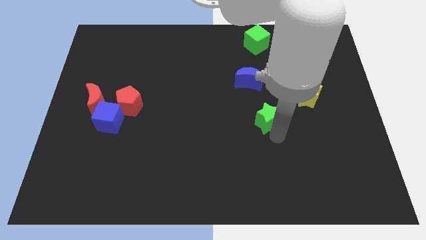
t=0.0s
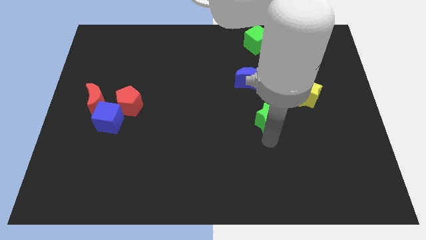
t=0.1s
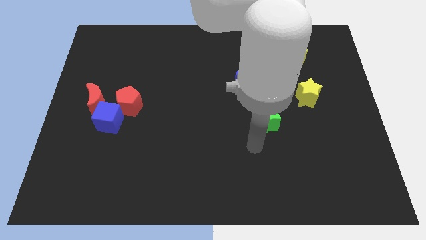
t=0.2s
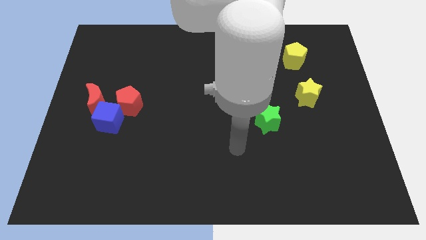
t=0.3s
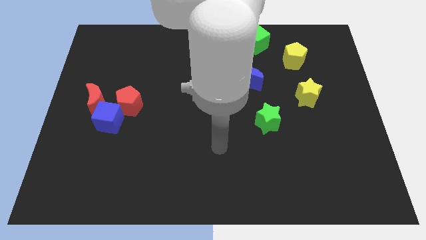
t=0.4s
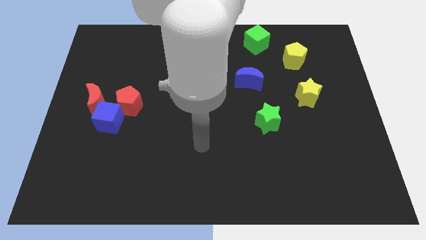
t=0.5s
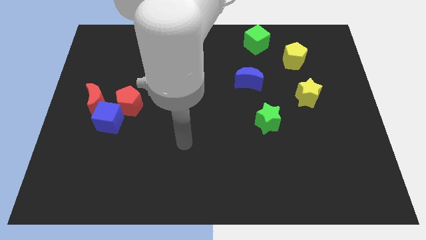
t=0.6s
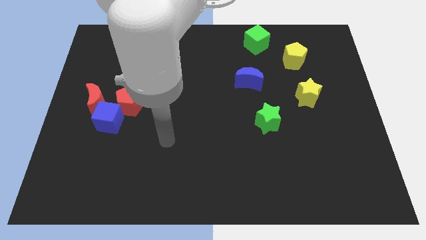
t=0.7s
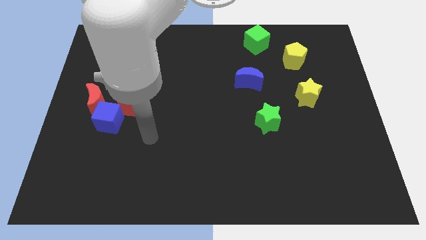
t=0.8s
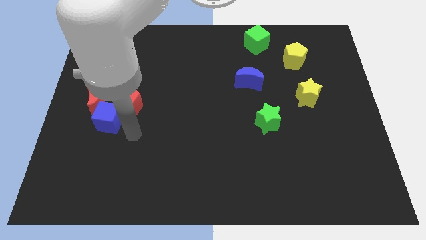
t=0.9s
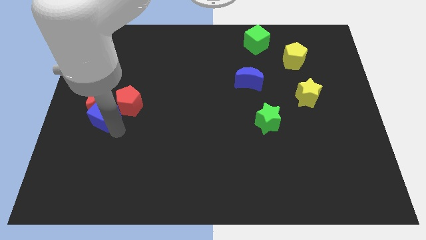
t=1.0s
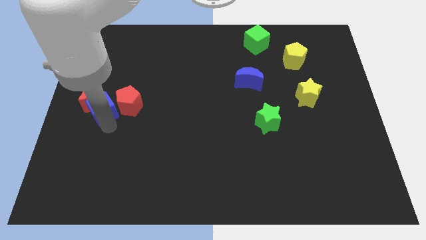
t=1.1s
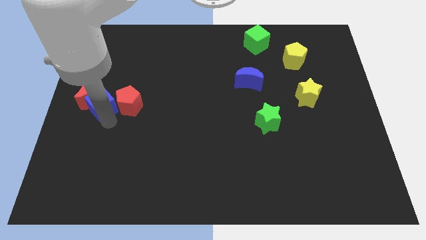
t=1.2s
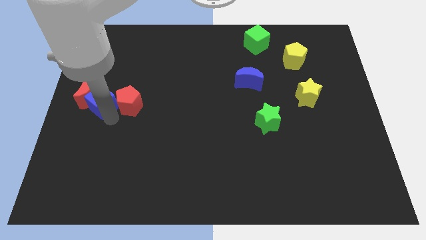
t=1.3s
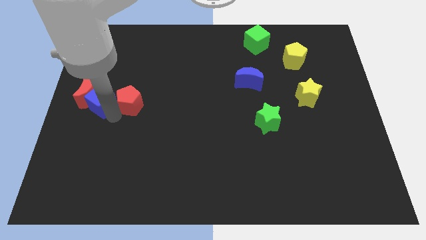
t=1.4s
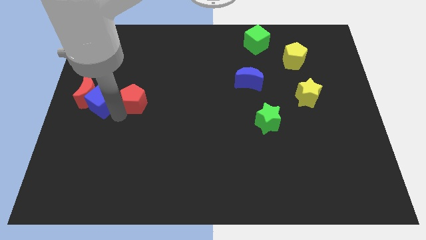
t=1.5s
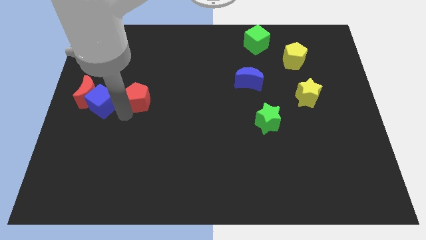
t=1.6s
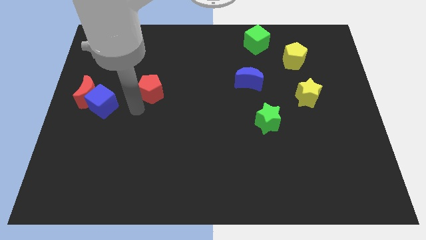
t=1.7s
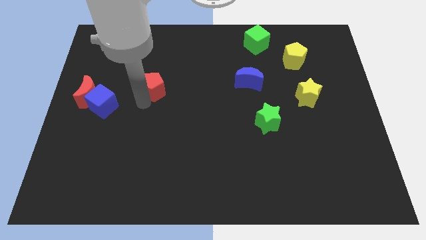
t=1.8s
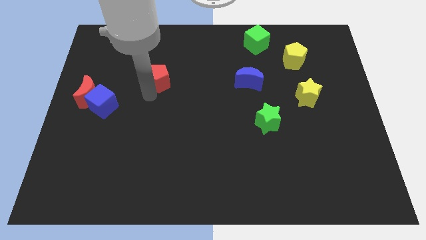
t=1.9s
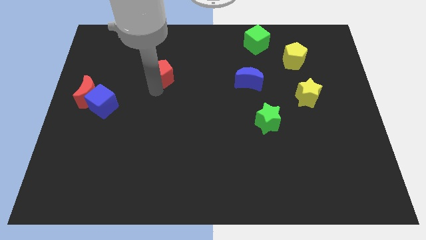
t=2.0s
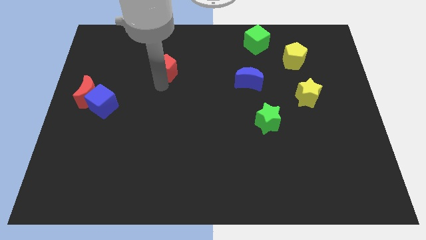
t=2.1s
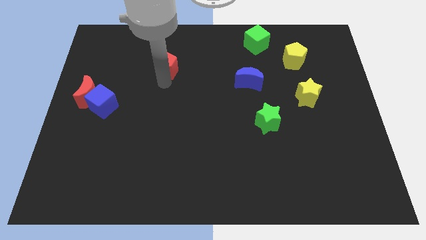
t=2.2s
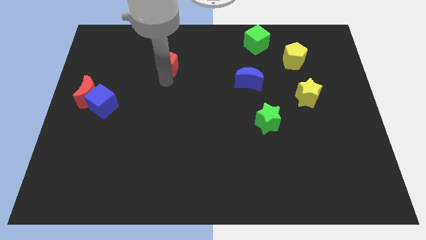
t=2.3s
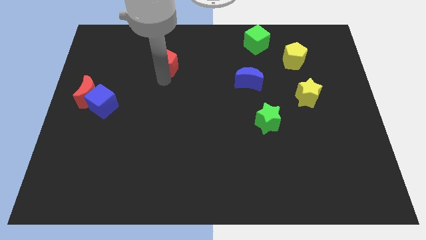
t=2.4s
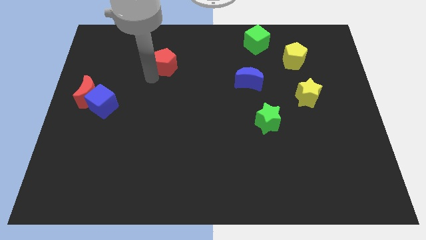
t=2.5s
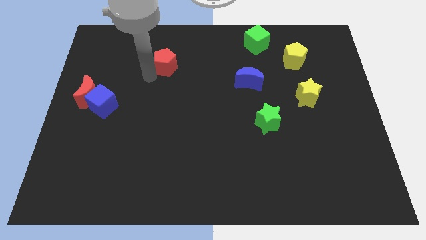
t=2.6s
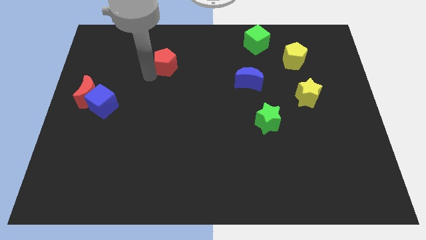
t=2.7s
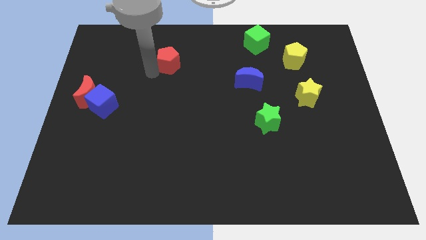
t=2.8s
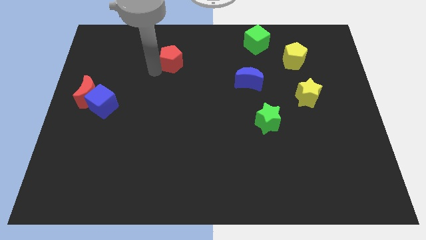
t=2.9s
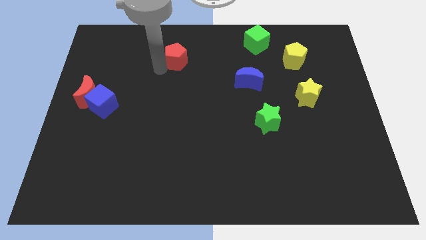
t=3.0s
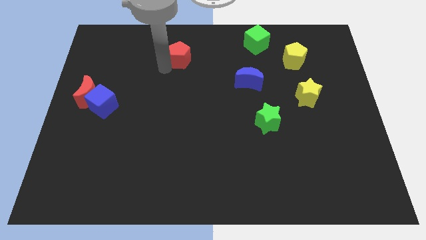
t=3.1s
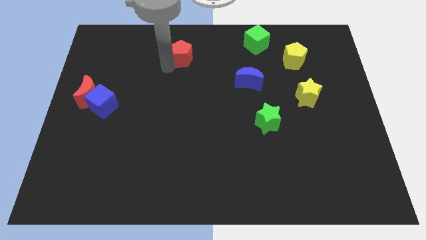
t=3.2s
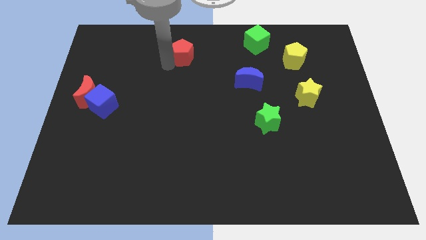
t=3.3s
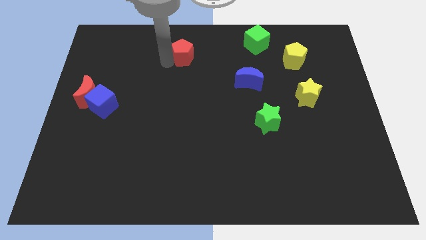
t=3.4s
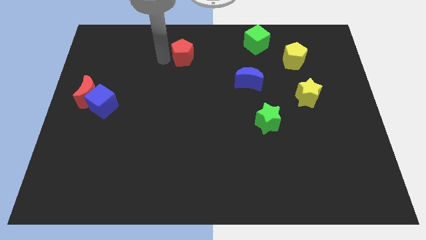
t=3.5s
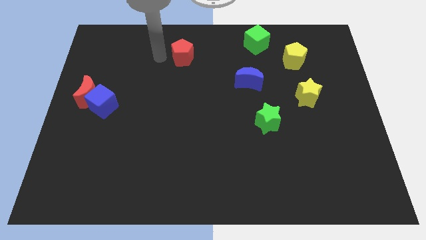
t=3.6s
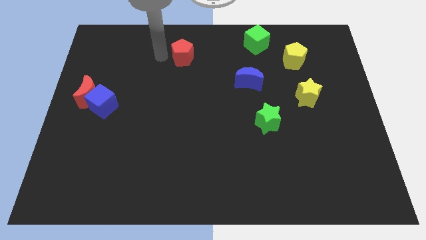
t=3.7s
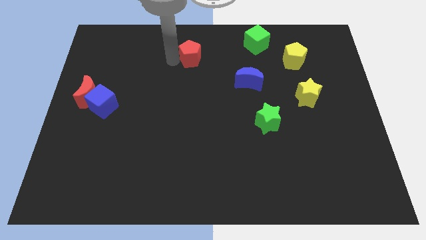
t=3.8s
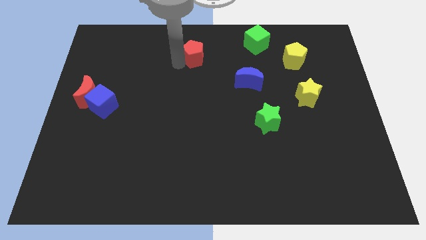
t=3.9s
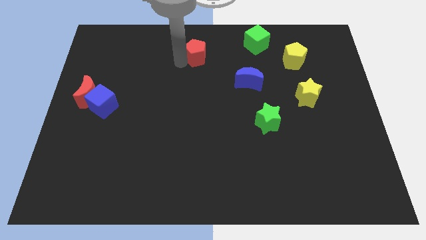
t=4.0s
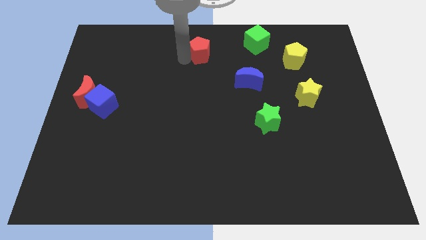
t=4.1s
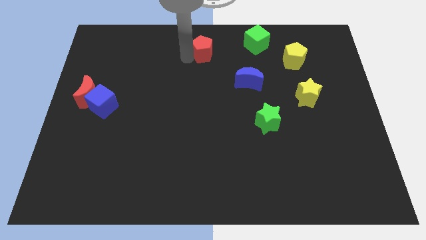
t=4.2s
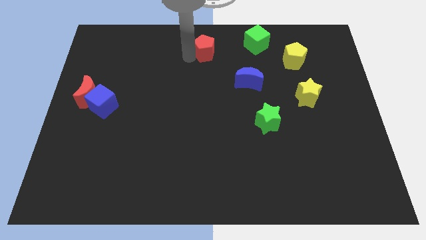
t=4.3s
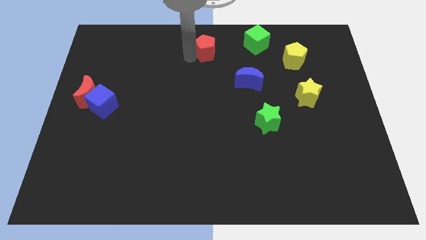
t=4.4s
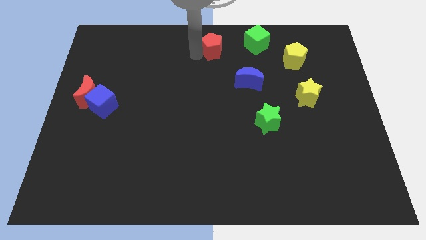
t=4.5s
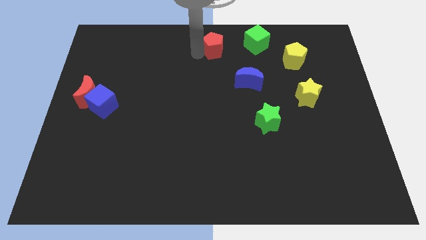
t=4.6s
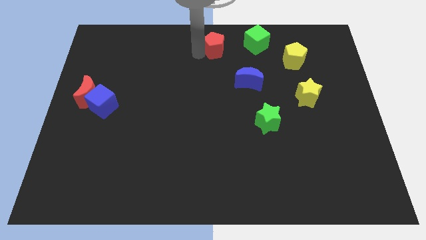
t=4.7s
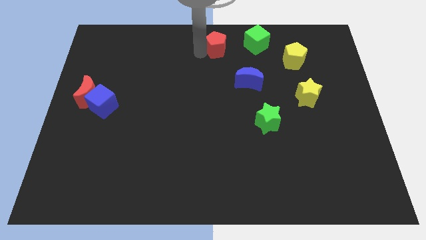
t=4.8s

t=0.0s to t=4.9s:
drag the red pentagon towards the left side of the green cube

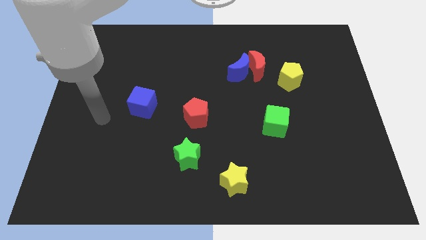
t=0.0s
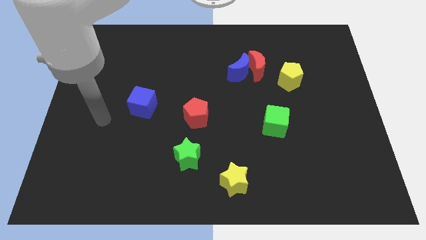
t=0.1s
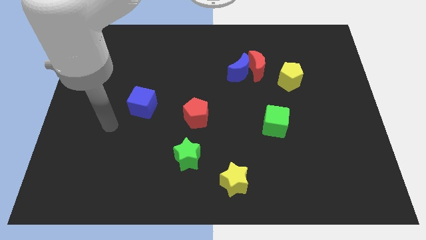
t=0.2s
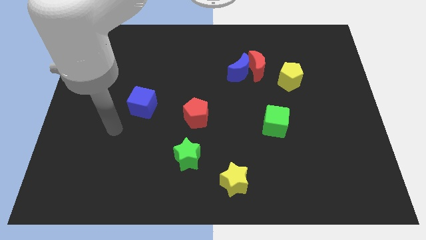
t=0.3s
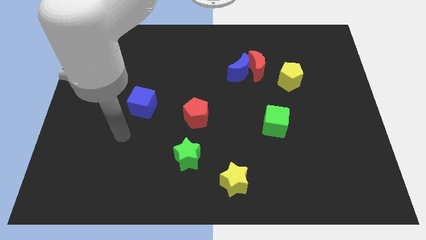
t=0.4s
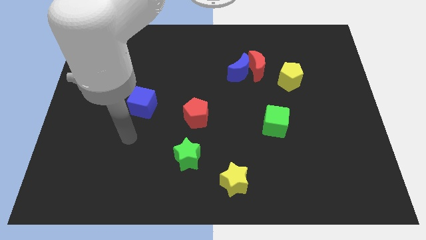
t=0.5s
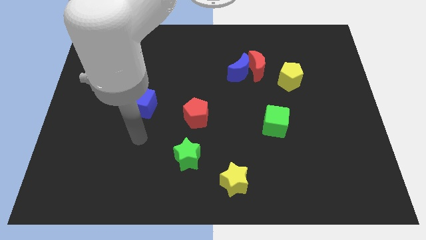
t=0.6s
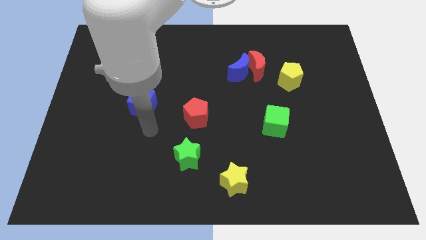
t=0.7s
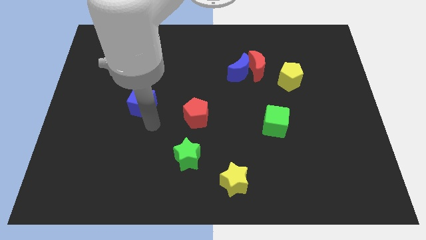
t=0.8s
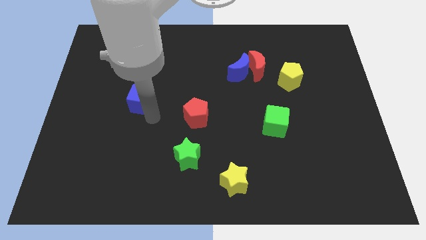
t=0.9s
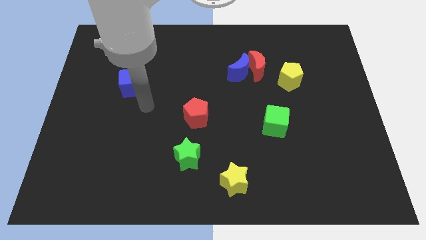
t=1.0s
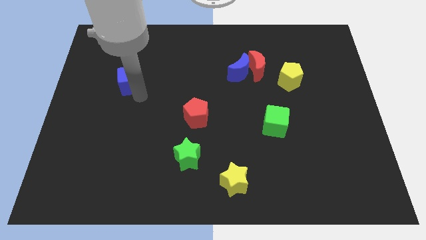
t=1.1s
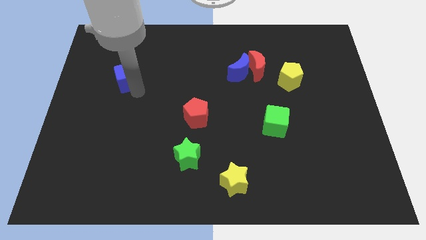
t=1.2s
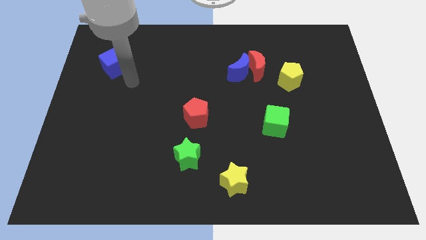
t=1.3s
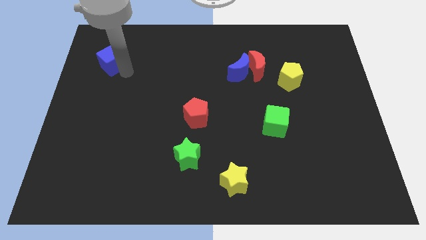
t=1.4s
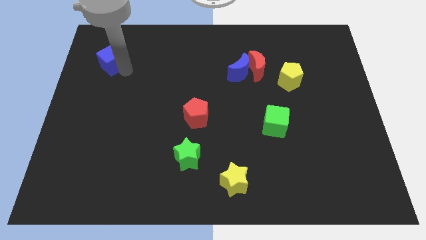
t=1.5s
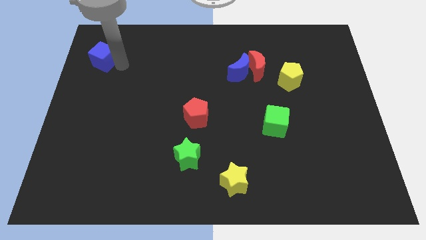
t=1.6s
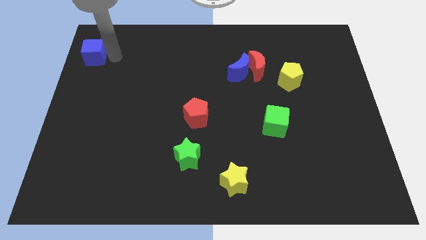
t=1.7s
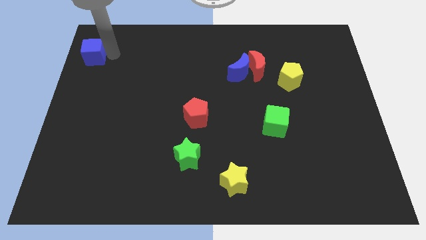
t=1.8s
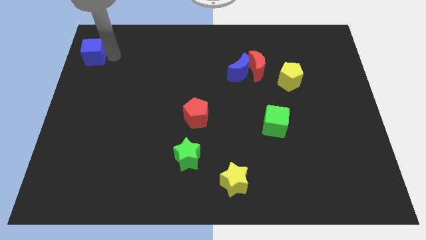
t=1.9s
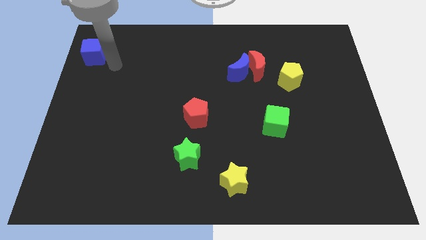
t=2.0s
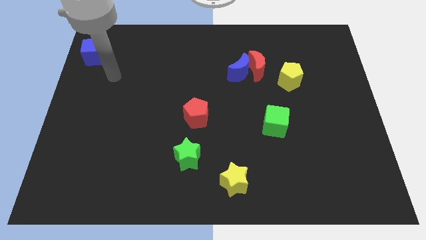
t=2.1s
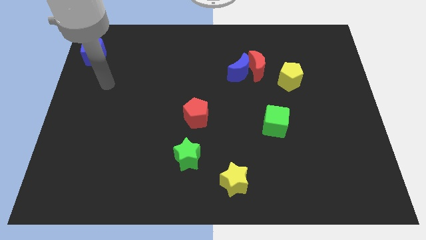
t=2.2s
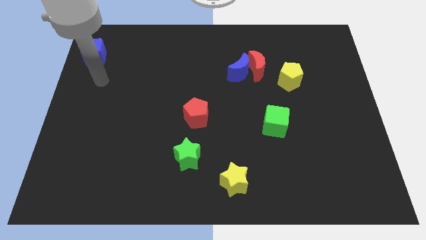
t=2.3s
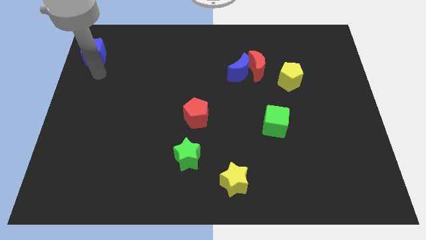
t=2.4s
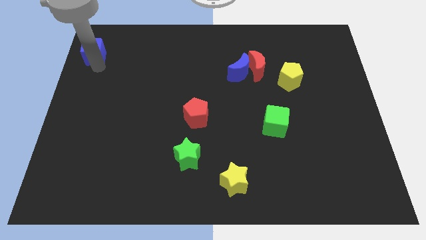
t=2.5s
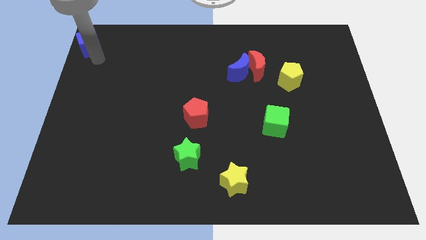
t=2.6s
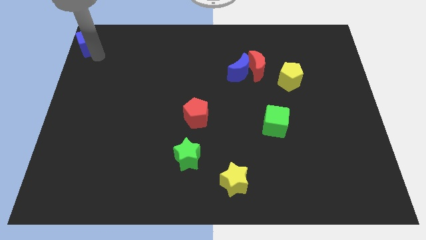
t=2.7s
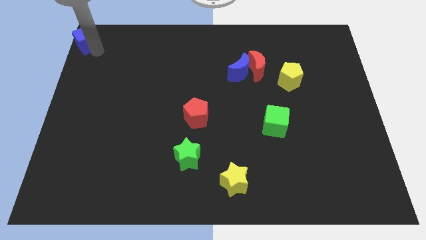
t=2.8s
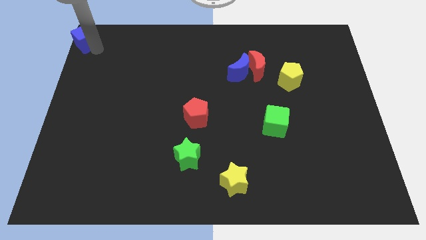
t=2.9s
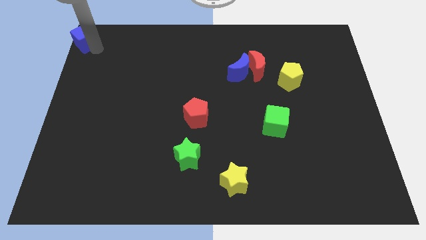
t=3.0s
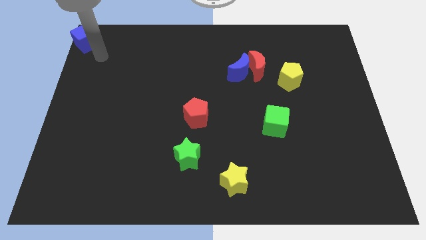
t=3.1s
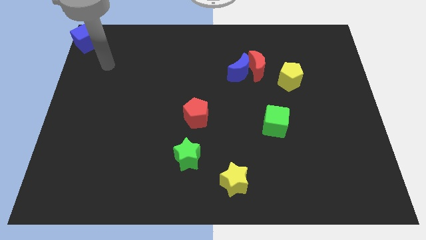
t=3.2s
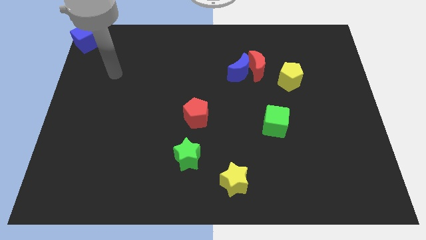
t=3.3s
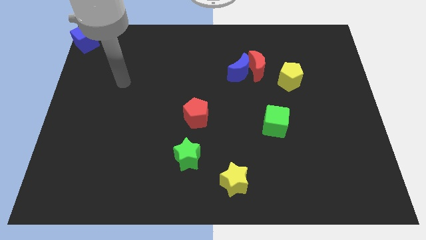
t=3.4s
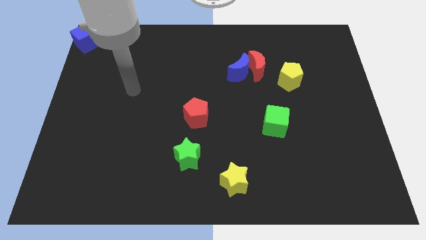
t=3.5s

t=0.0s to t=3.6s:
move the blue cube to the top left corner of the board

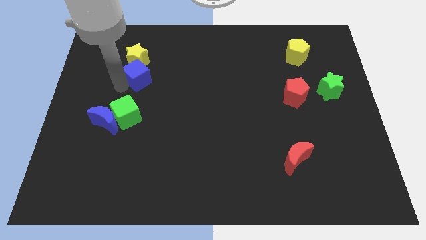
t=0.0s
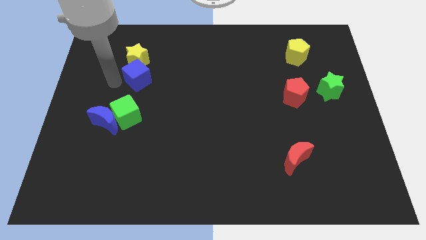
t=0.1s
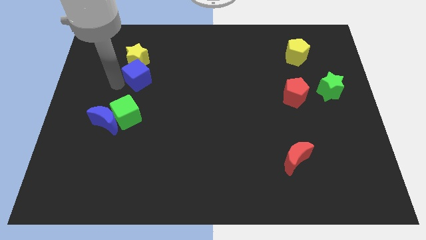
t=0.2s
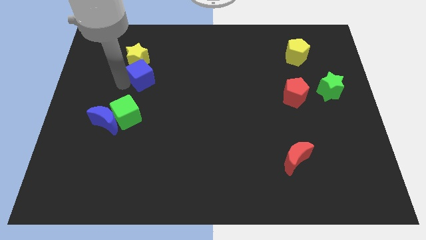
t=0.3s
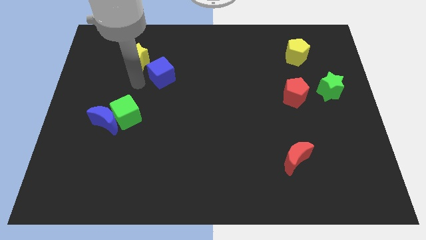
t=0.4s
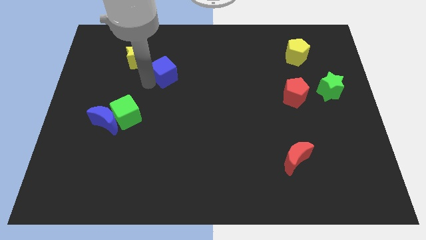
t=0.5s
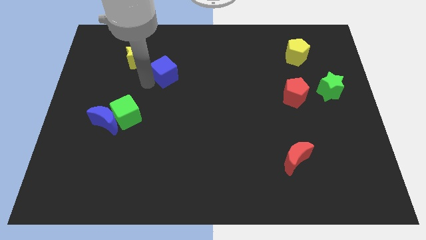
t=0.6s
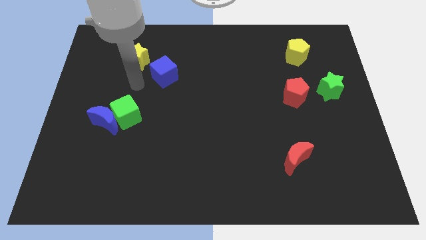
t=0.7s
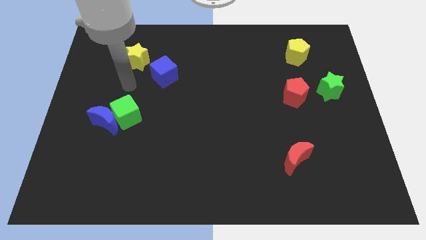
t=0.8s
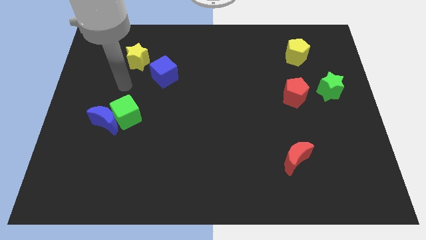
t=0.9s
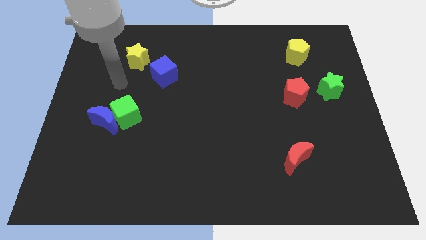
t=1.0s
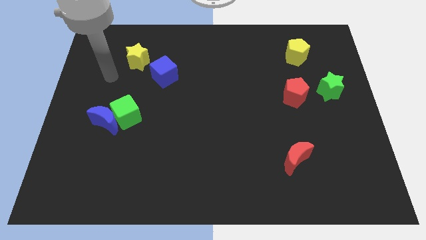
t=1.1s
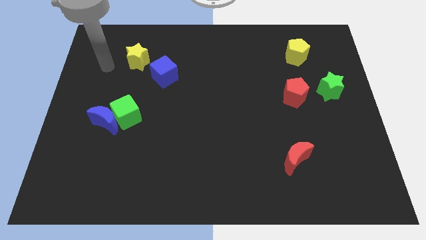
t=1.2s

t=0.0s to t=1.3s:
move blue cube to the bottom right of the yellow star
